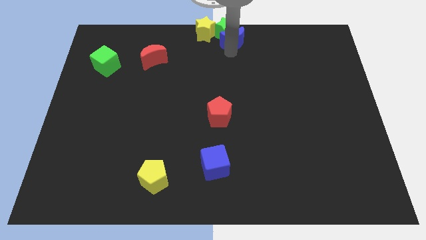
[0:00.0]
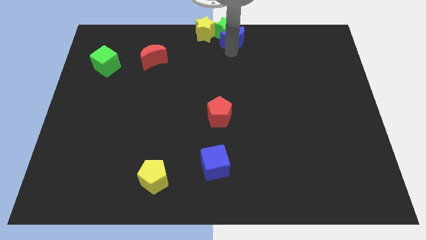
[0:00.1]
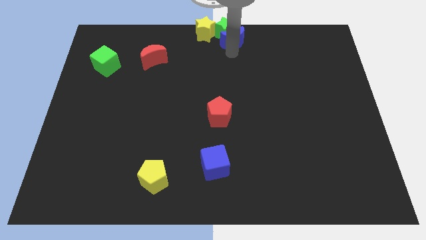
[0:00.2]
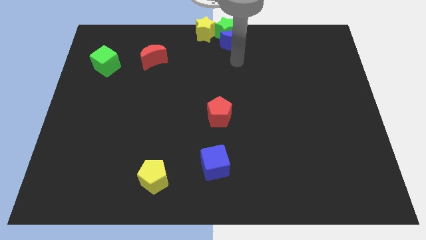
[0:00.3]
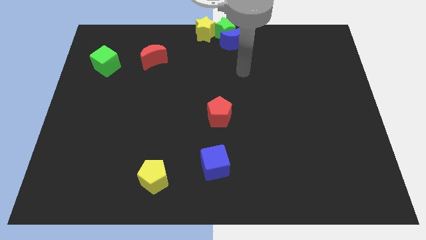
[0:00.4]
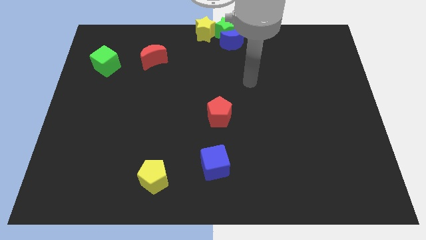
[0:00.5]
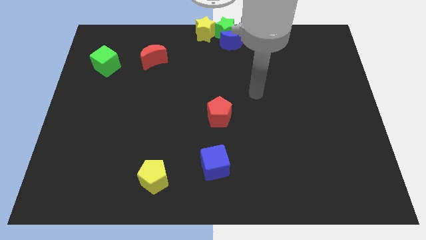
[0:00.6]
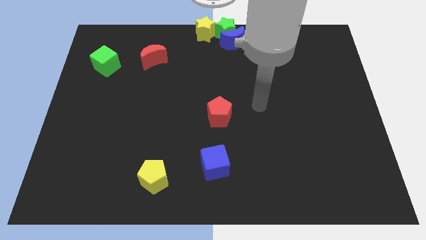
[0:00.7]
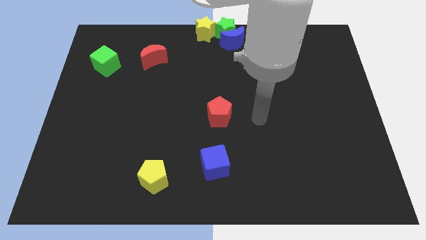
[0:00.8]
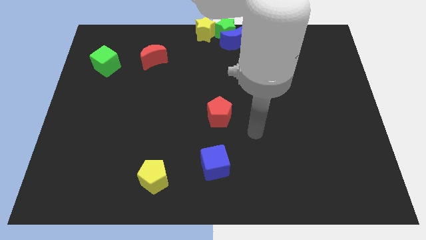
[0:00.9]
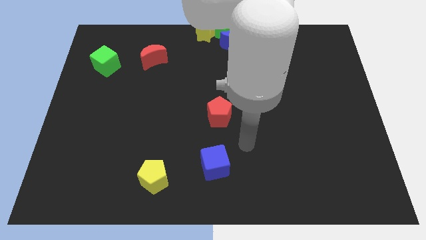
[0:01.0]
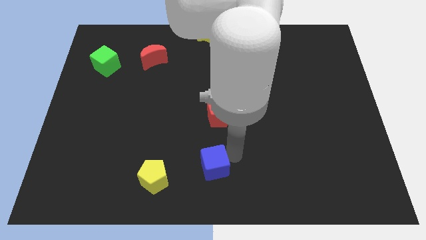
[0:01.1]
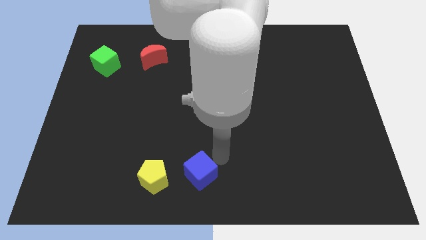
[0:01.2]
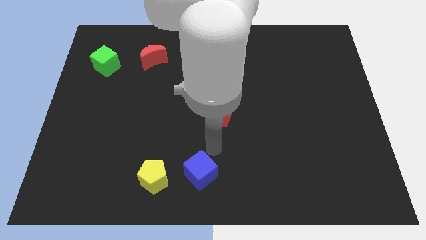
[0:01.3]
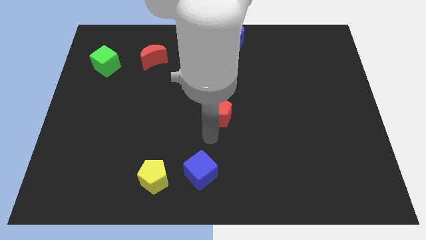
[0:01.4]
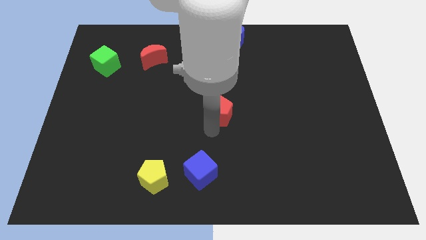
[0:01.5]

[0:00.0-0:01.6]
move your arm towards the bottom of the board

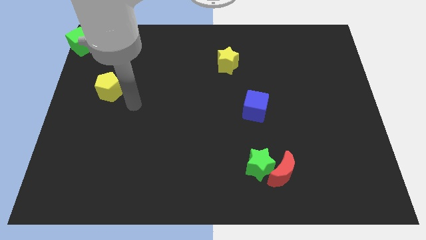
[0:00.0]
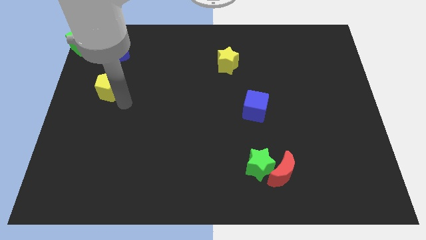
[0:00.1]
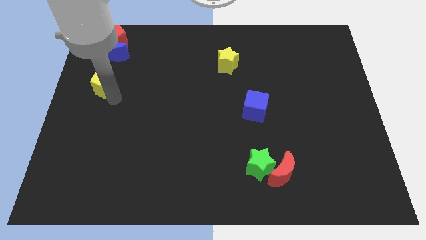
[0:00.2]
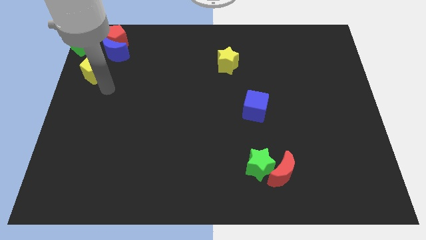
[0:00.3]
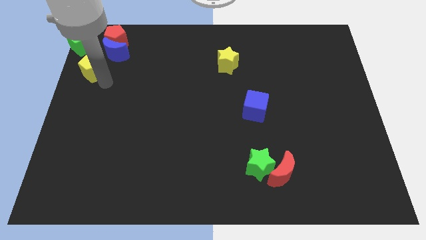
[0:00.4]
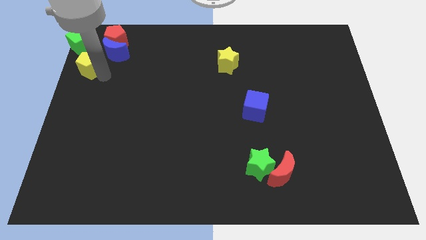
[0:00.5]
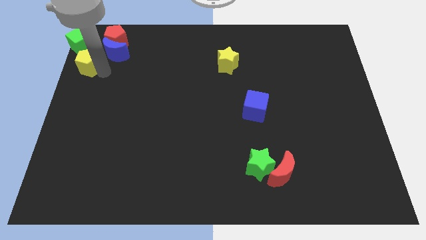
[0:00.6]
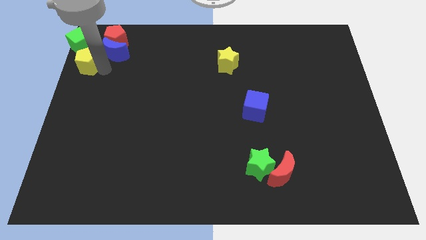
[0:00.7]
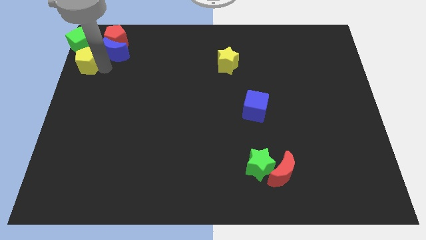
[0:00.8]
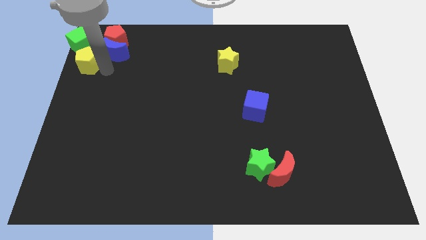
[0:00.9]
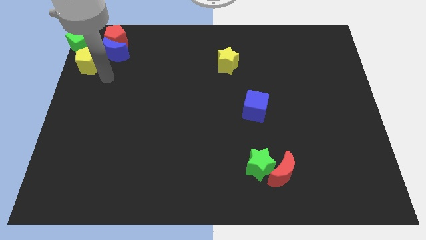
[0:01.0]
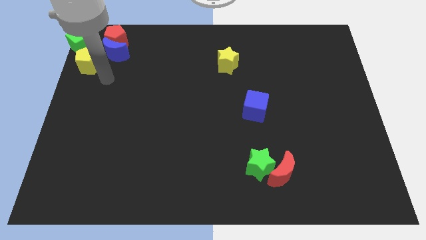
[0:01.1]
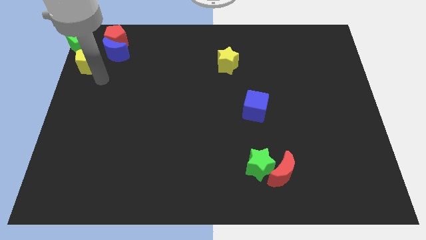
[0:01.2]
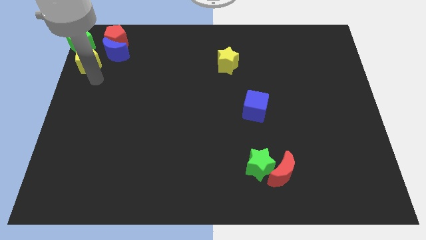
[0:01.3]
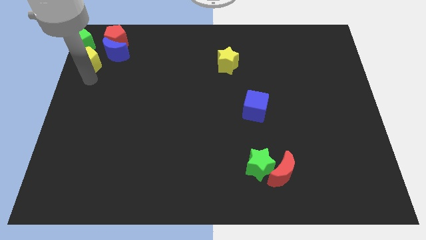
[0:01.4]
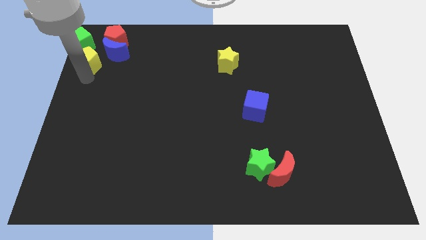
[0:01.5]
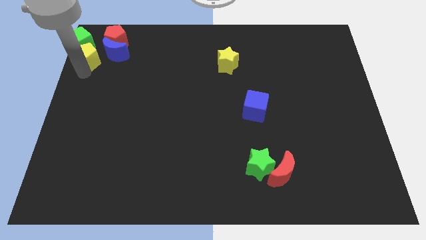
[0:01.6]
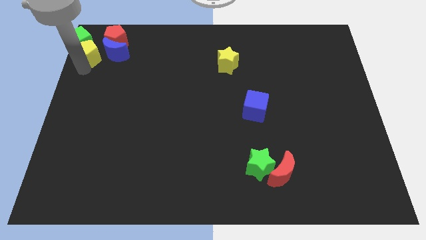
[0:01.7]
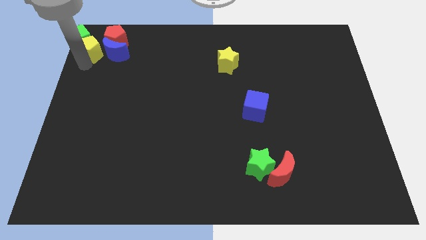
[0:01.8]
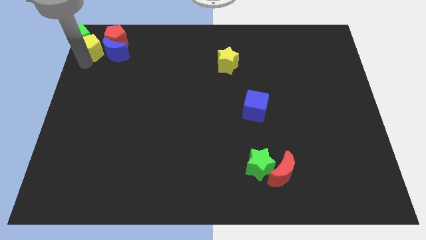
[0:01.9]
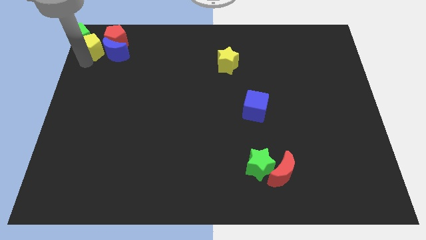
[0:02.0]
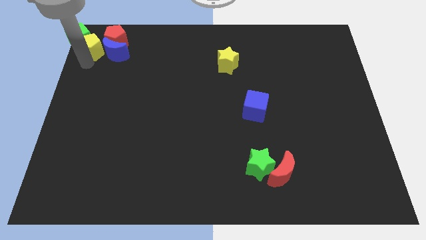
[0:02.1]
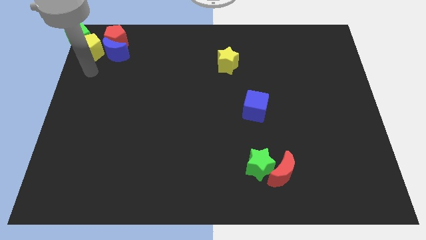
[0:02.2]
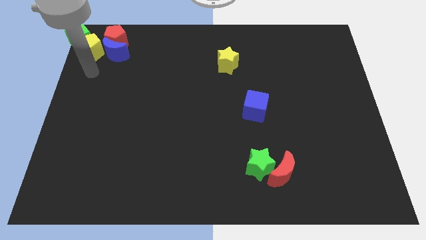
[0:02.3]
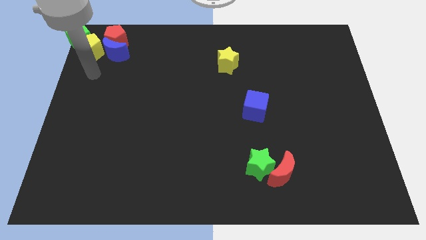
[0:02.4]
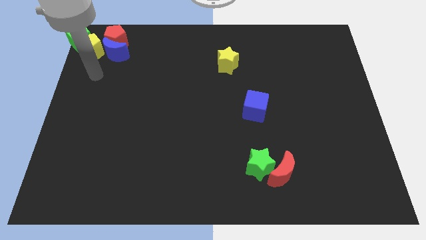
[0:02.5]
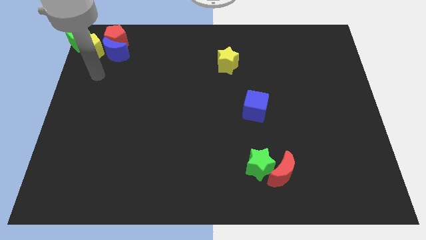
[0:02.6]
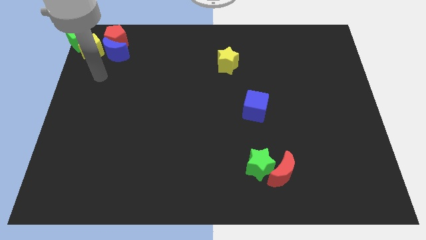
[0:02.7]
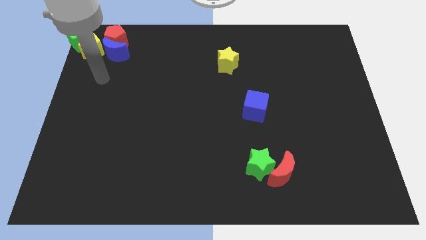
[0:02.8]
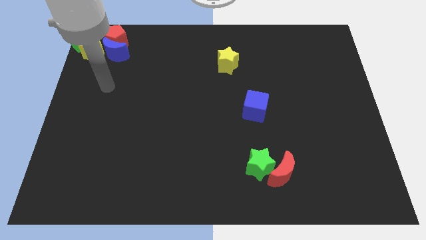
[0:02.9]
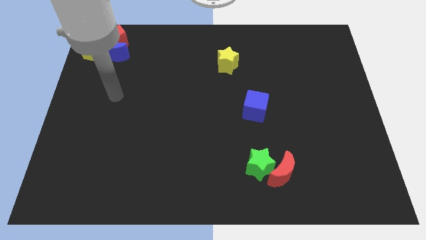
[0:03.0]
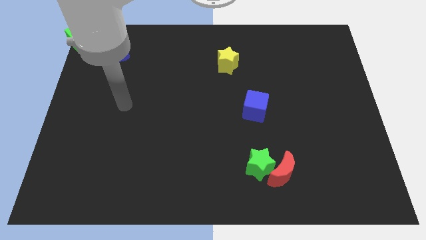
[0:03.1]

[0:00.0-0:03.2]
push the yellow pentagon to the top of the blue crescent

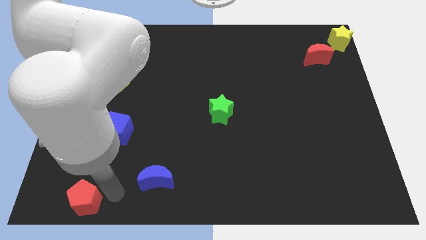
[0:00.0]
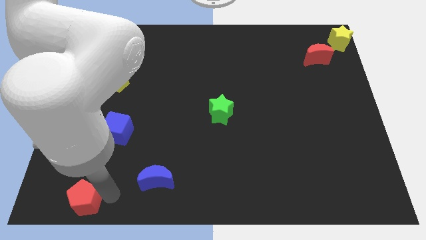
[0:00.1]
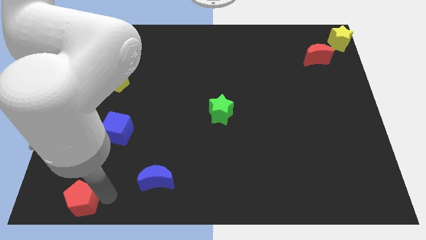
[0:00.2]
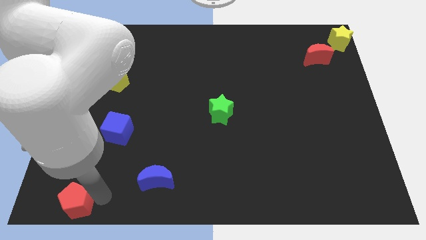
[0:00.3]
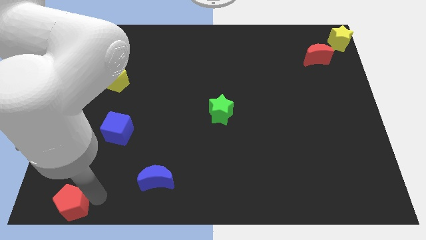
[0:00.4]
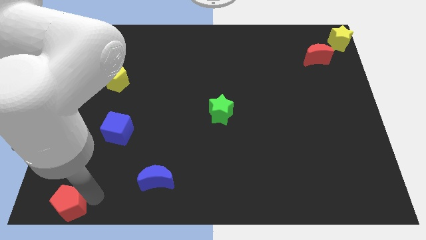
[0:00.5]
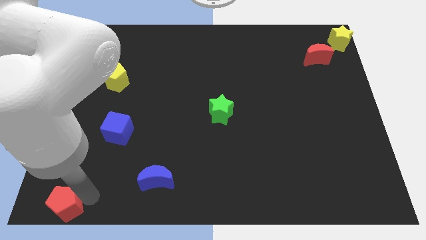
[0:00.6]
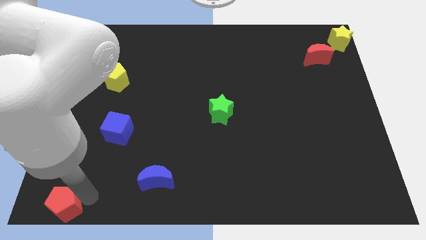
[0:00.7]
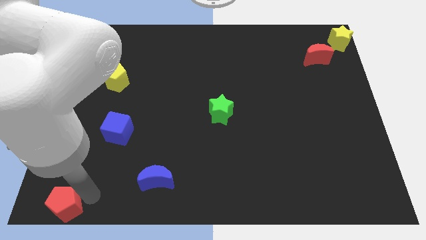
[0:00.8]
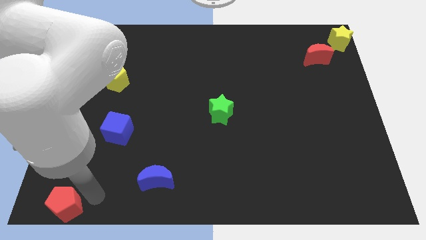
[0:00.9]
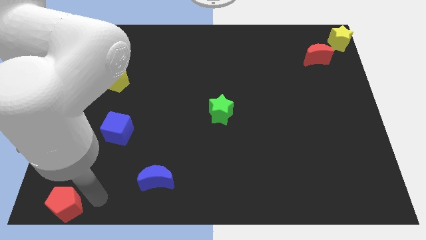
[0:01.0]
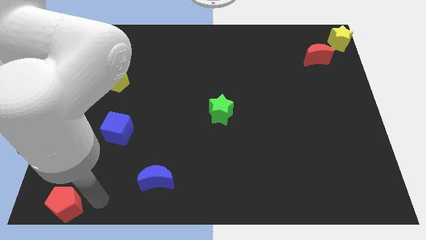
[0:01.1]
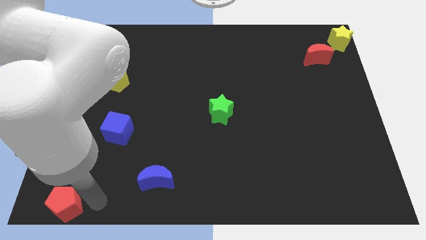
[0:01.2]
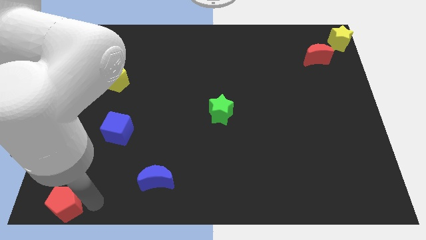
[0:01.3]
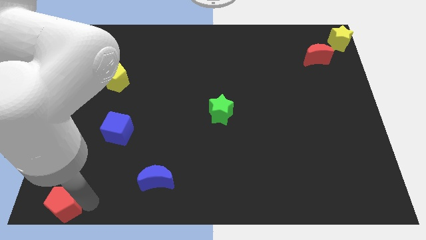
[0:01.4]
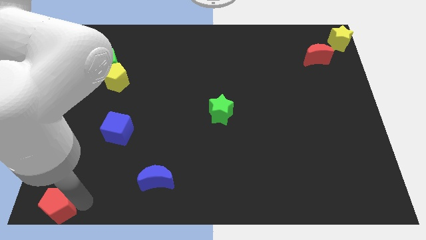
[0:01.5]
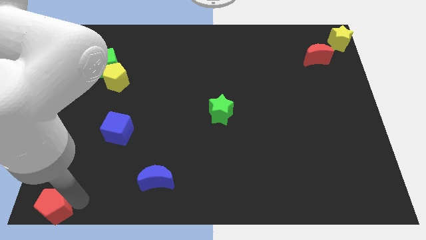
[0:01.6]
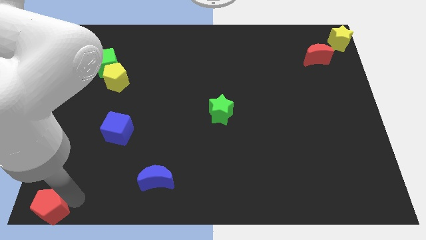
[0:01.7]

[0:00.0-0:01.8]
move the red pentagon towards the bottom left

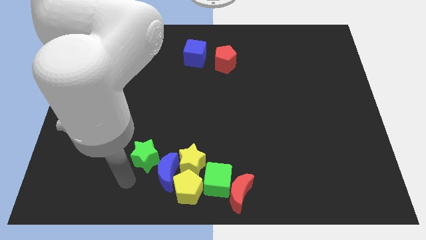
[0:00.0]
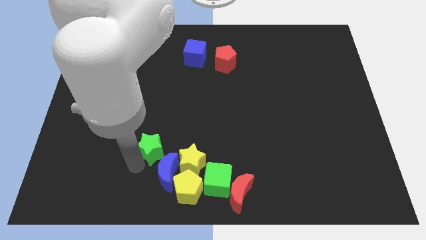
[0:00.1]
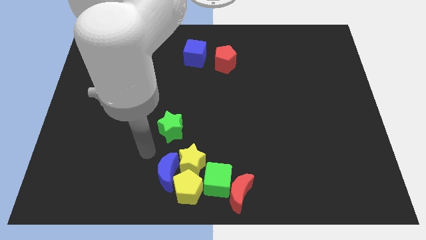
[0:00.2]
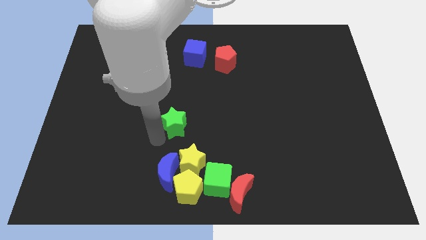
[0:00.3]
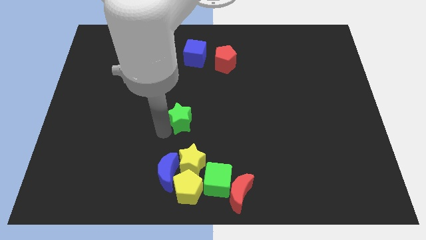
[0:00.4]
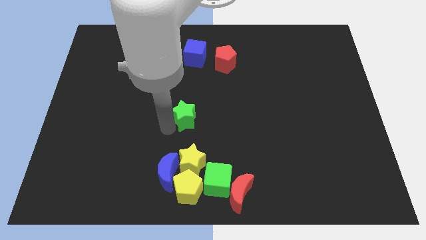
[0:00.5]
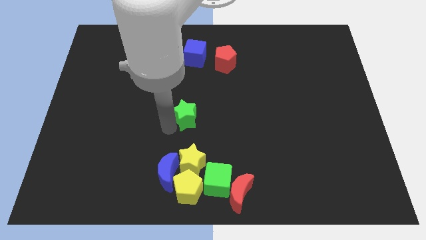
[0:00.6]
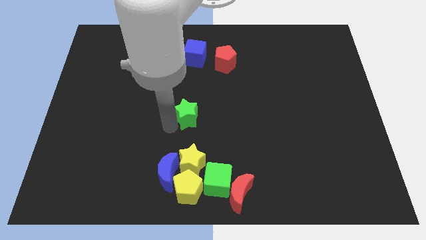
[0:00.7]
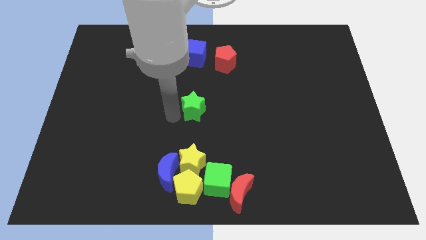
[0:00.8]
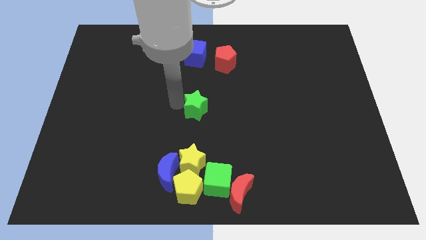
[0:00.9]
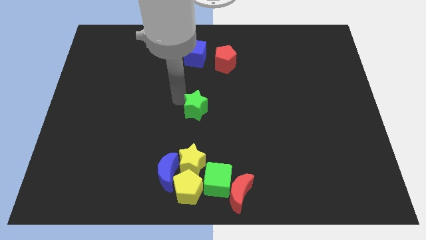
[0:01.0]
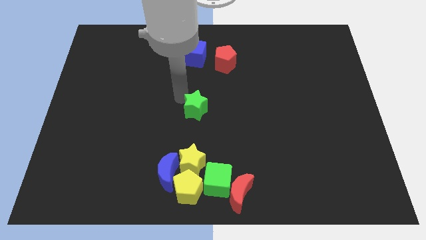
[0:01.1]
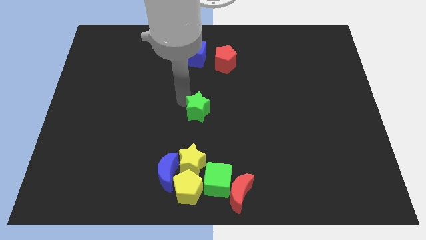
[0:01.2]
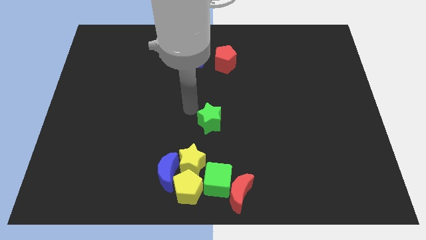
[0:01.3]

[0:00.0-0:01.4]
move the green star to the center of the board

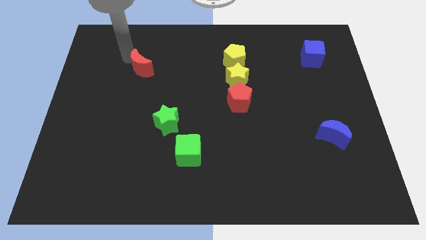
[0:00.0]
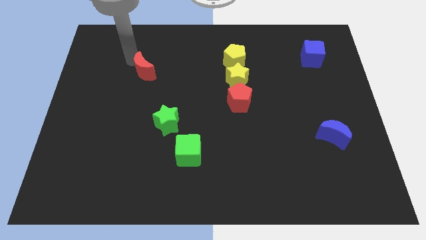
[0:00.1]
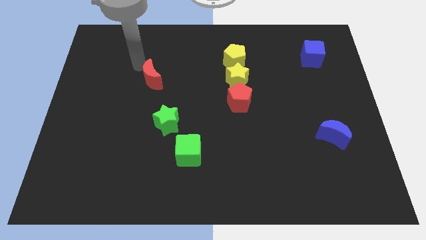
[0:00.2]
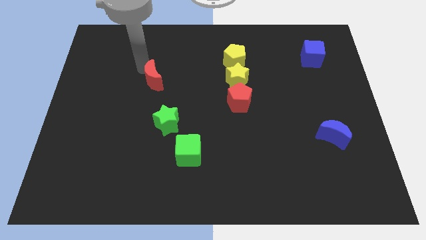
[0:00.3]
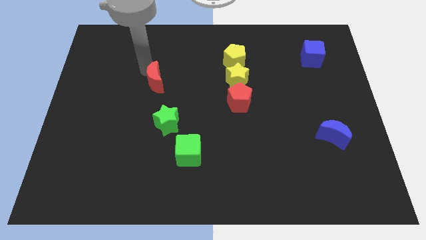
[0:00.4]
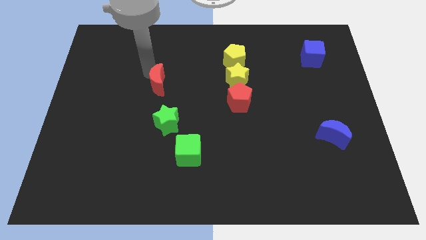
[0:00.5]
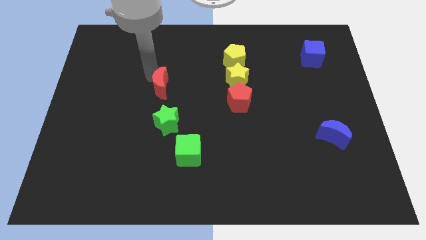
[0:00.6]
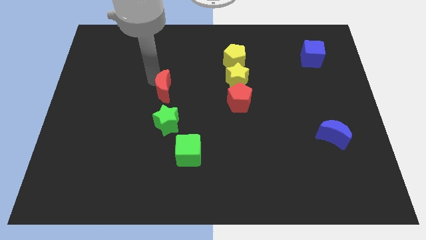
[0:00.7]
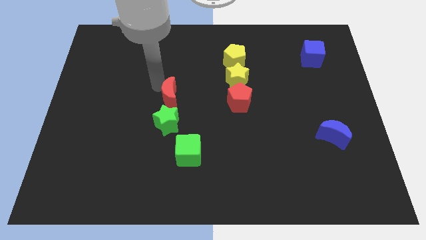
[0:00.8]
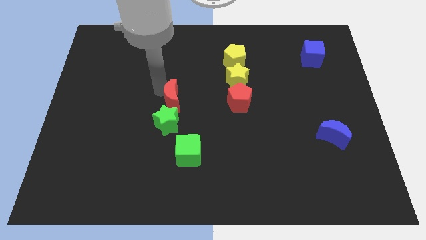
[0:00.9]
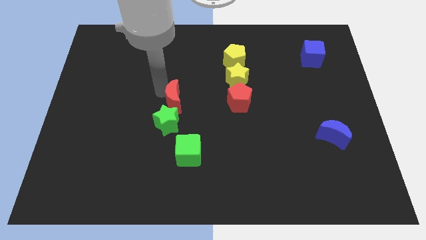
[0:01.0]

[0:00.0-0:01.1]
push red moon towards green star
